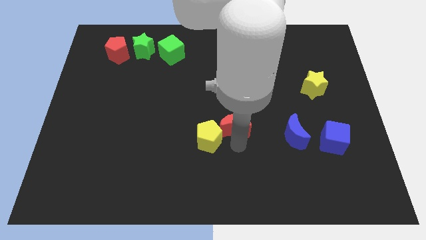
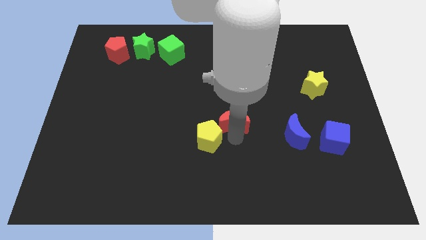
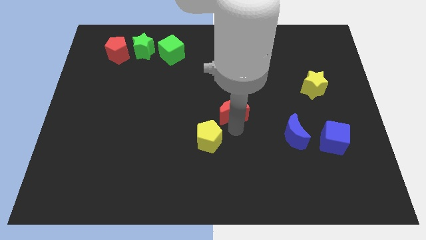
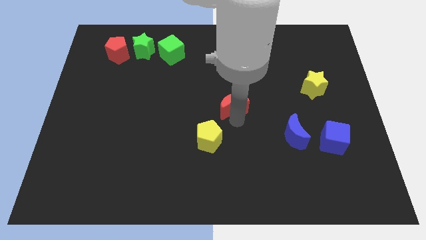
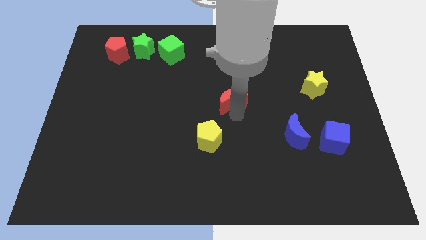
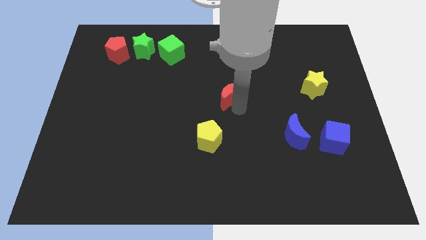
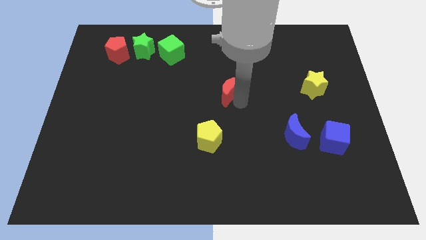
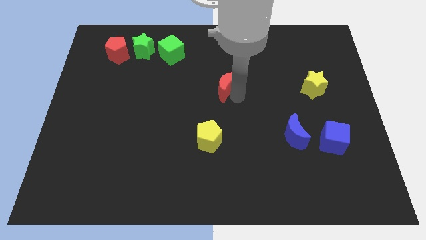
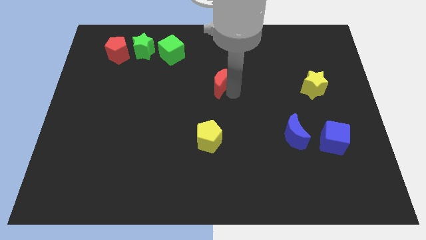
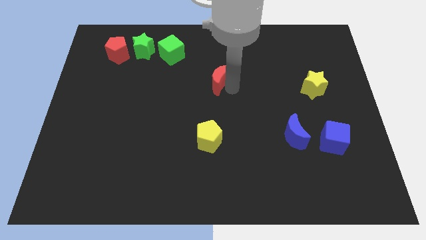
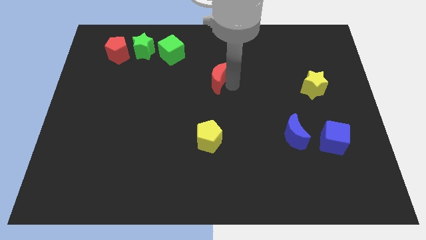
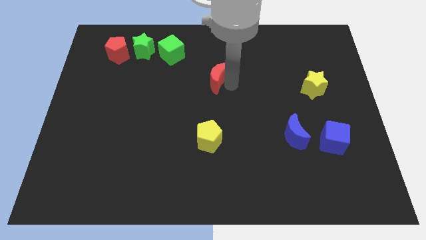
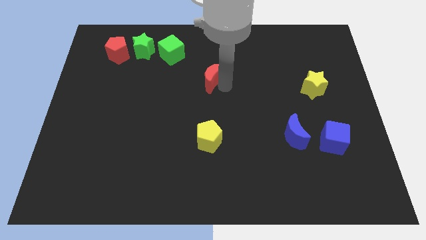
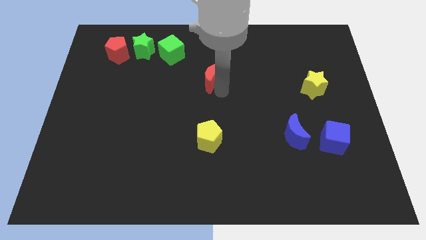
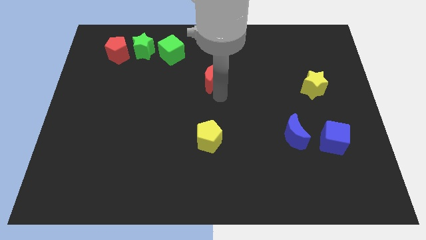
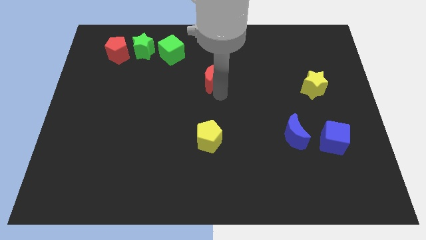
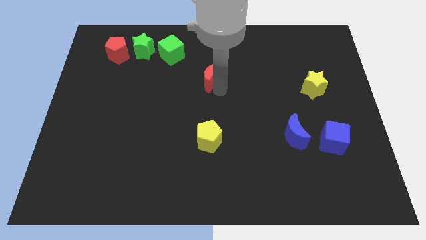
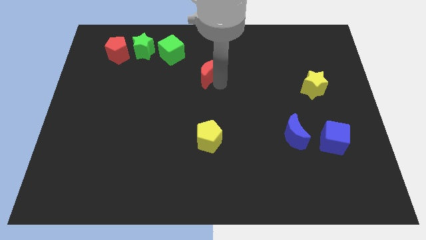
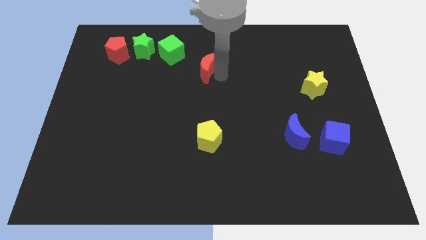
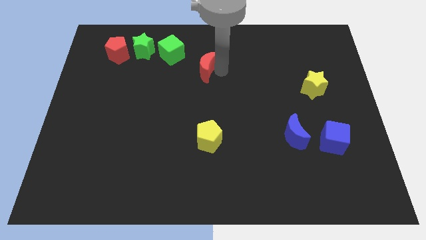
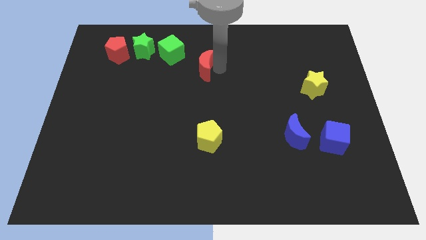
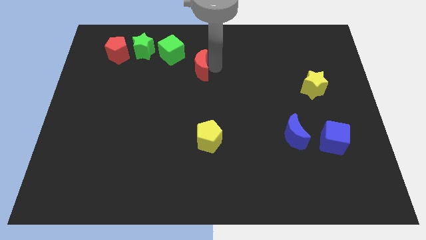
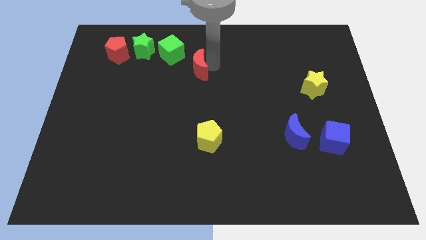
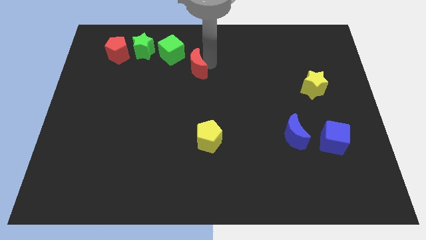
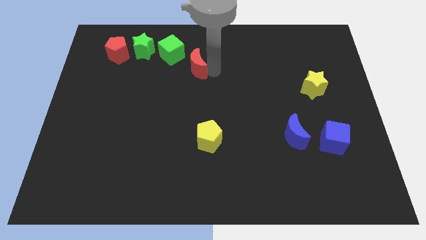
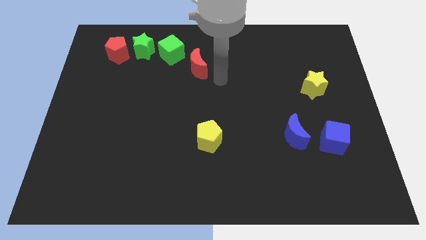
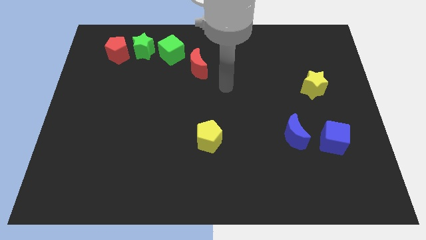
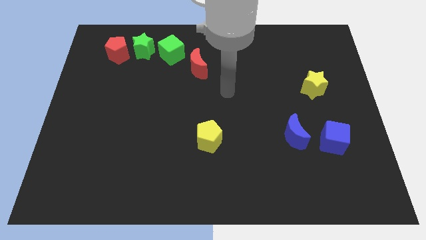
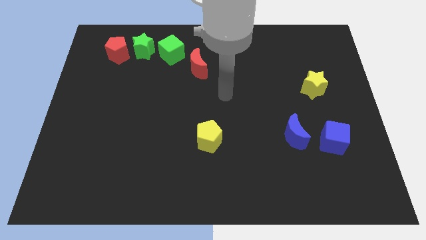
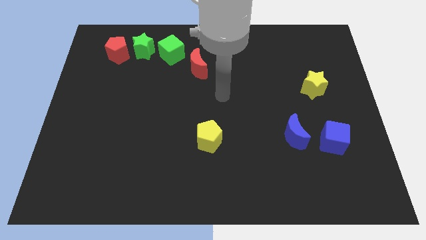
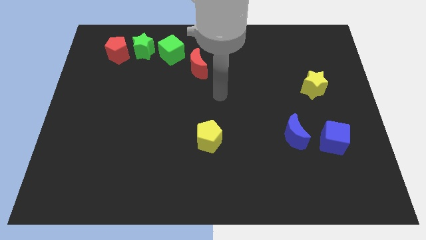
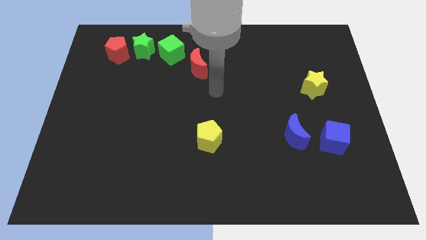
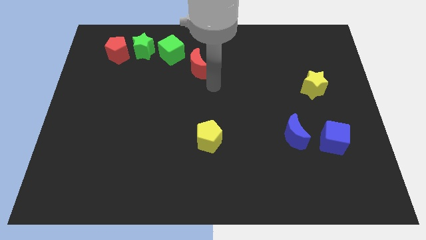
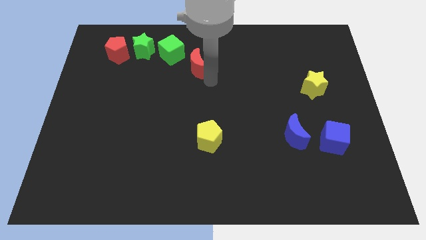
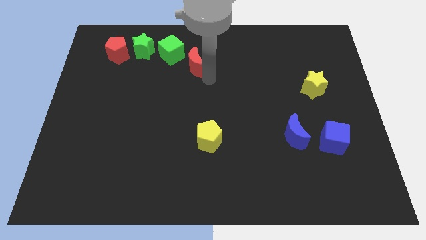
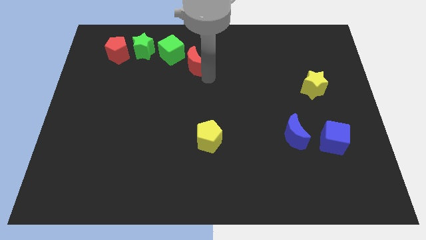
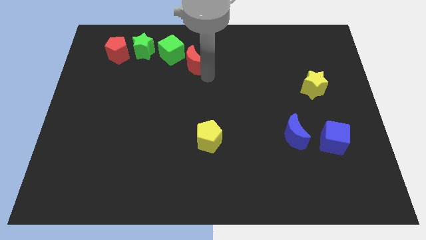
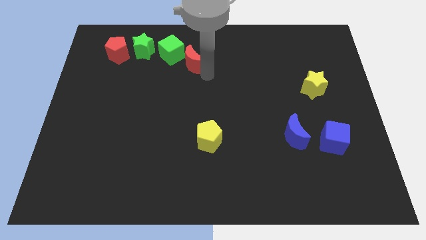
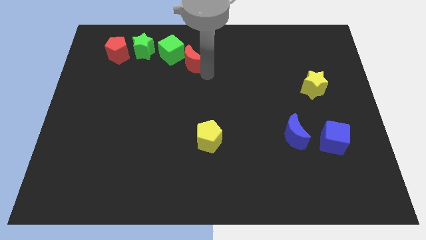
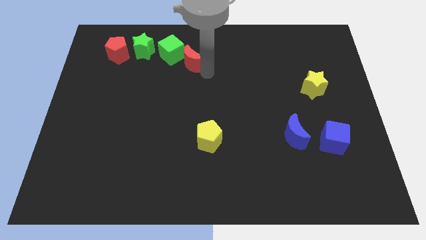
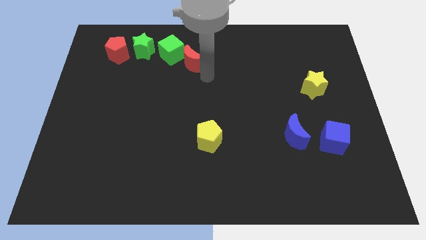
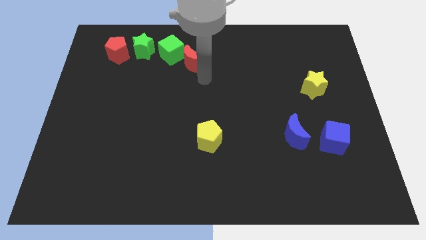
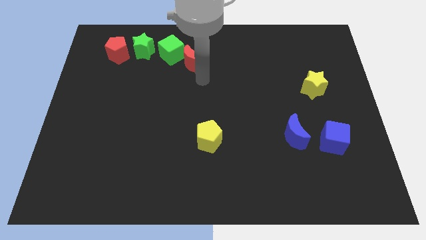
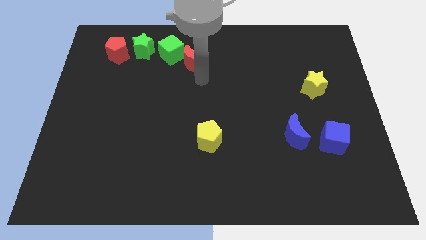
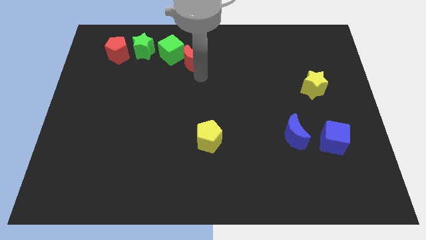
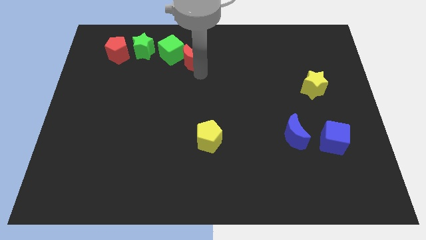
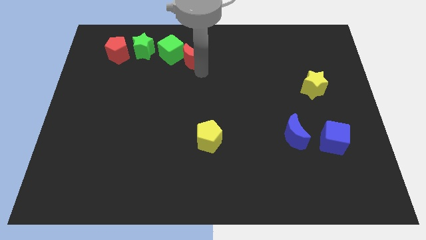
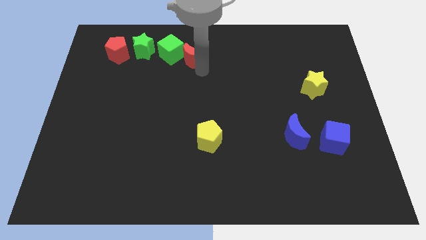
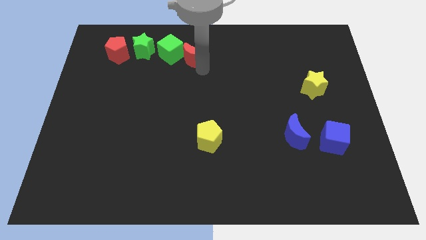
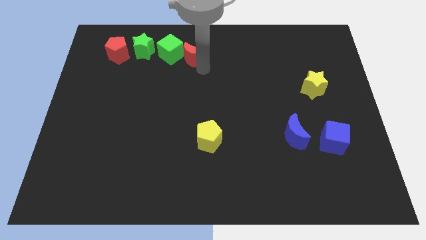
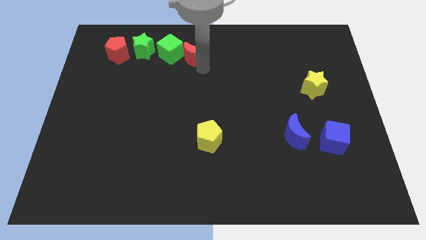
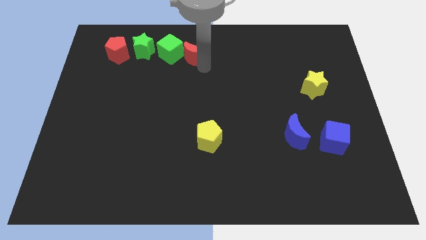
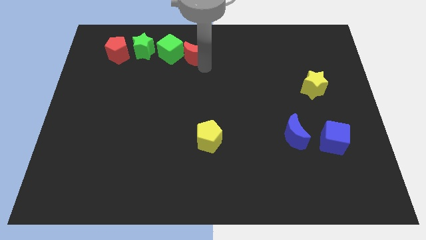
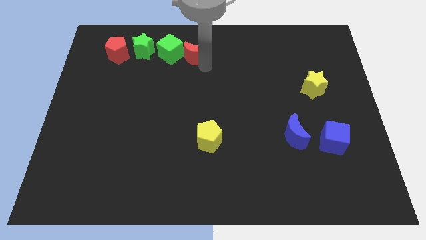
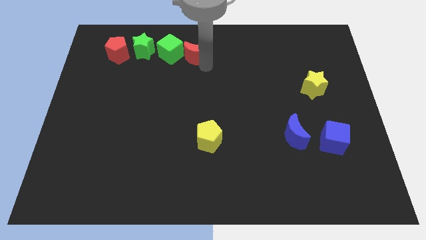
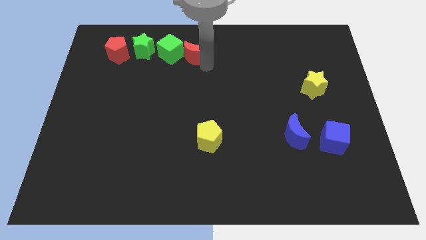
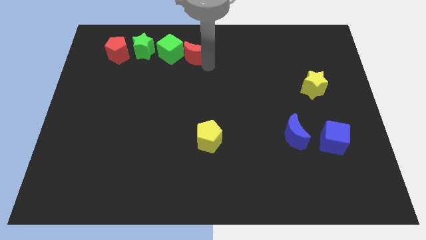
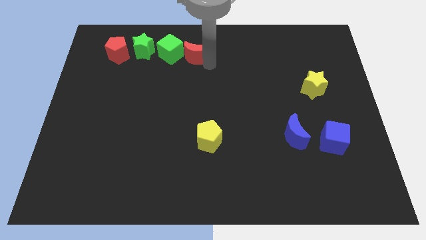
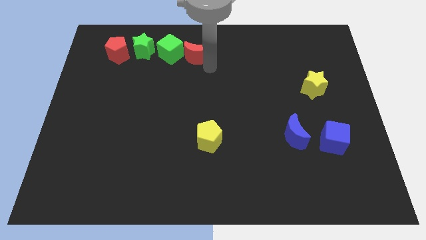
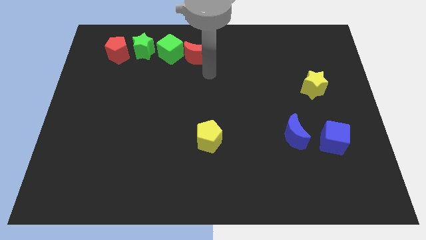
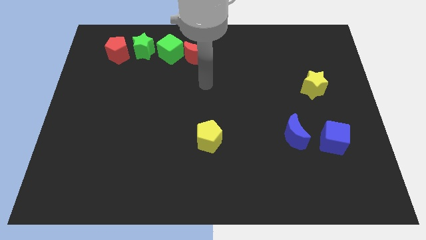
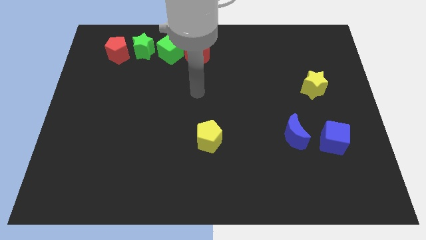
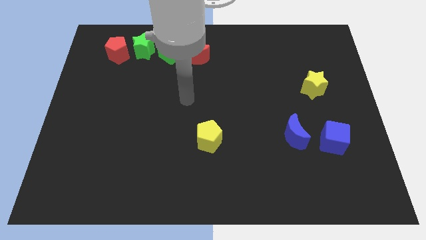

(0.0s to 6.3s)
place the red crescent to the right side of the green cube

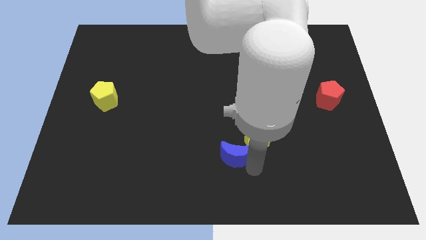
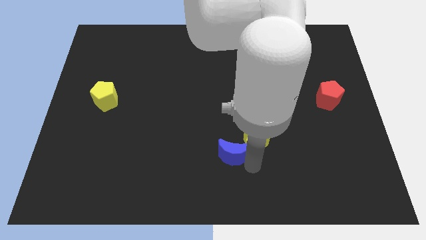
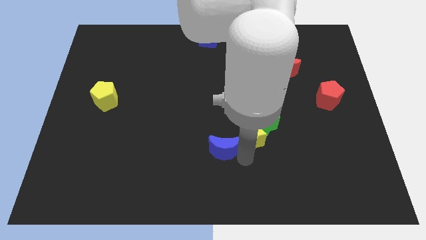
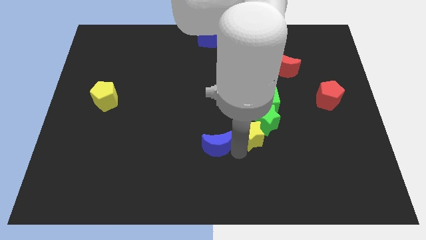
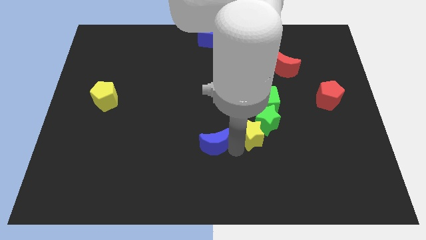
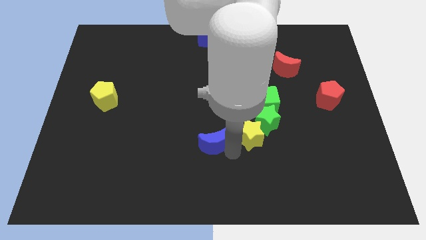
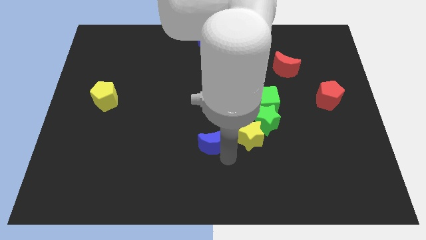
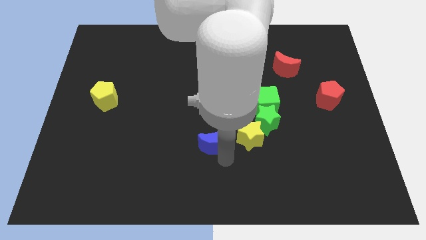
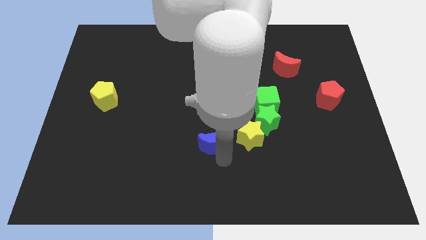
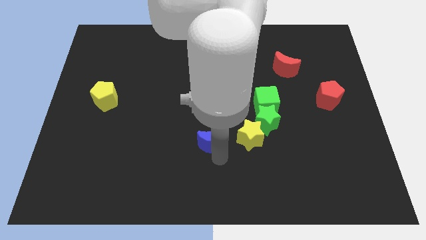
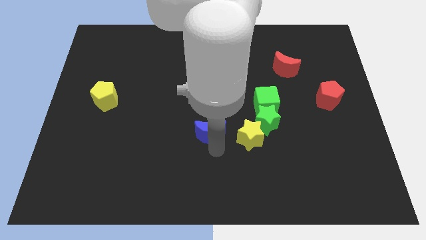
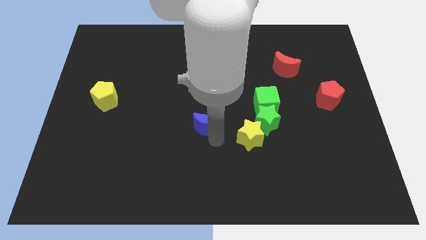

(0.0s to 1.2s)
place blue moon adjacent to yellow star

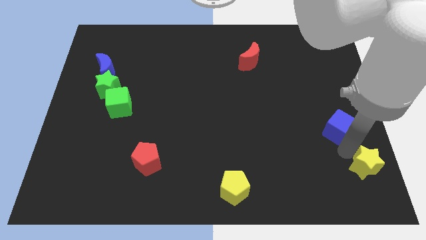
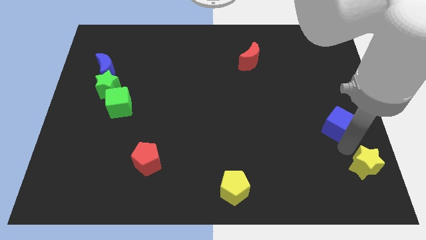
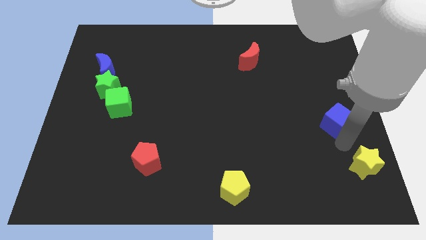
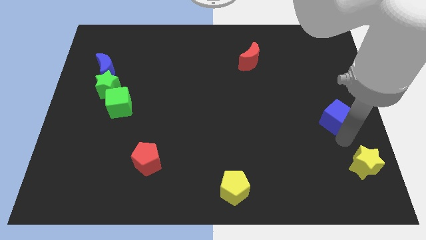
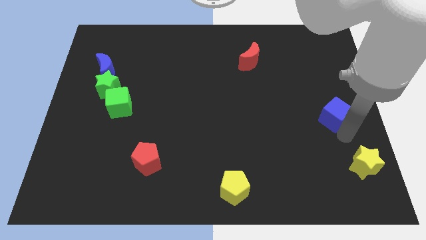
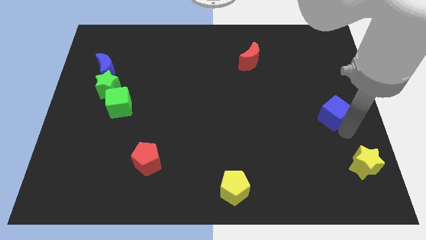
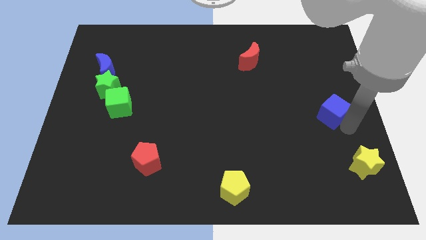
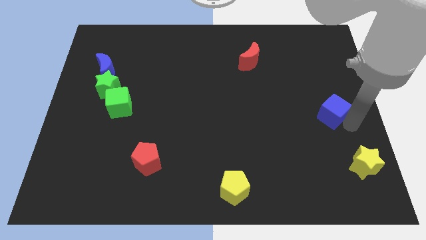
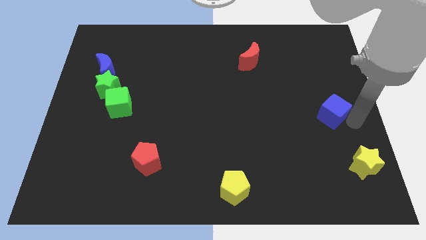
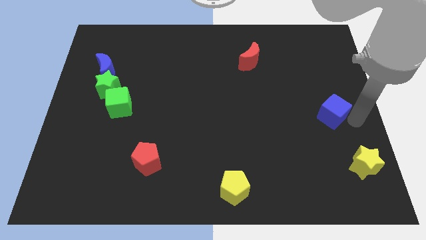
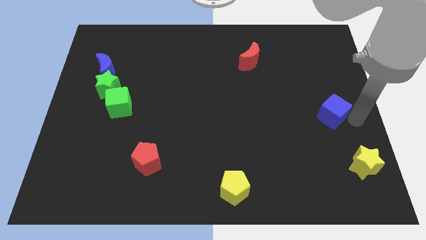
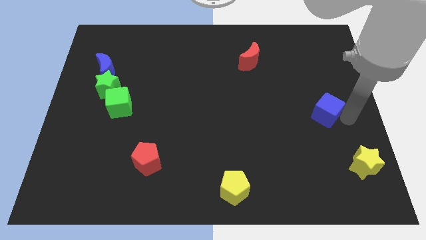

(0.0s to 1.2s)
push the blue cube slightly to the top

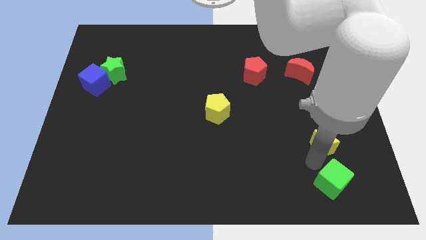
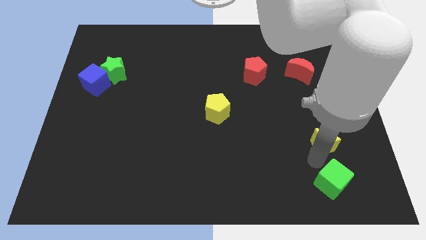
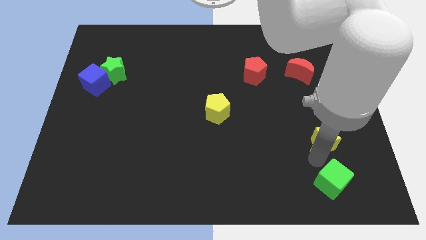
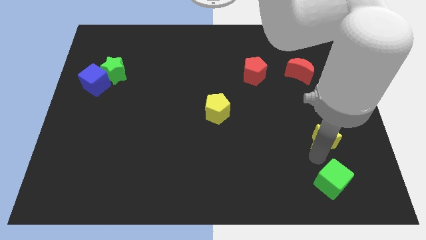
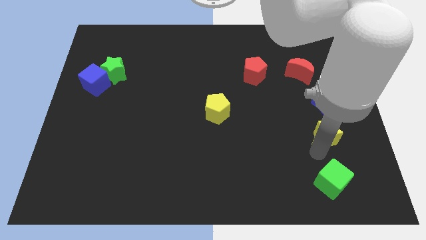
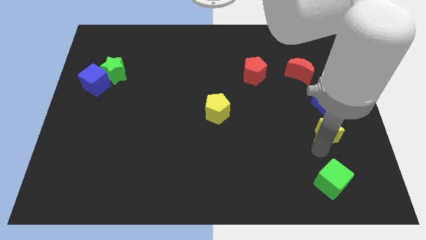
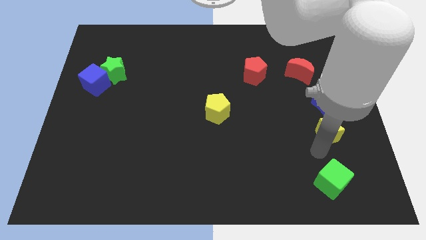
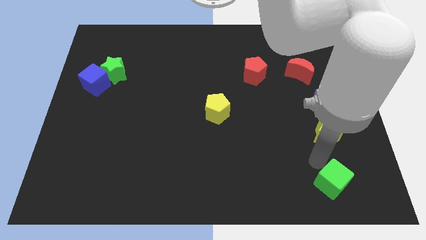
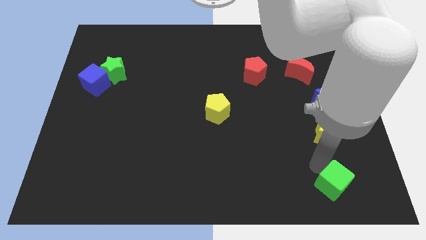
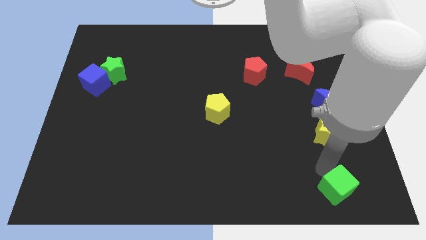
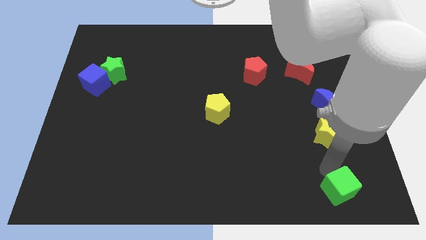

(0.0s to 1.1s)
place your hand in between yellow star and green cube
